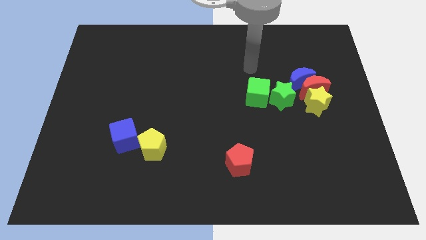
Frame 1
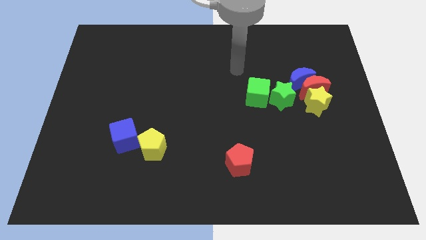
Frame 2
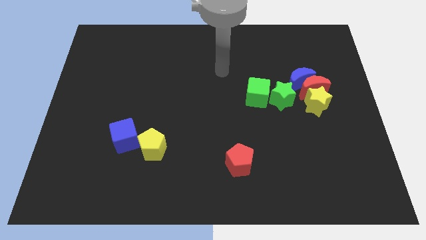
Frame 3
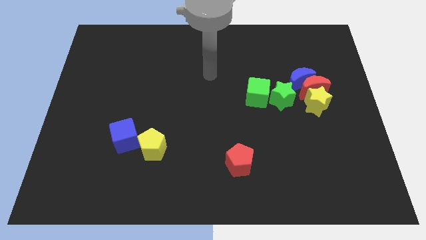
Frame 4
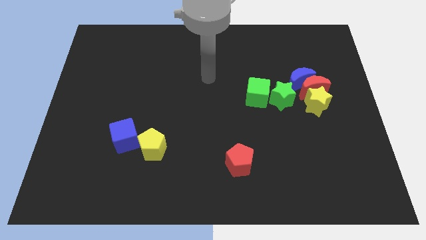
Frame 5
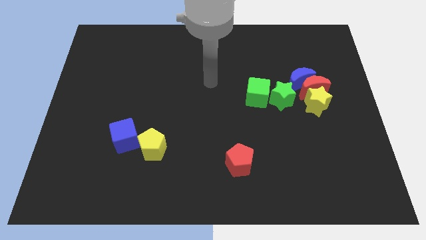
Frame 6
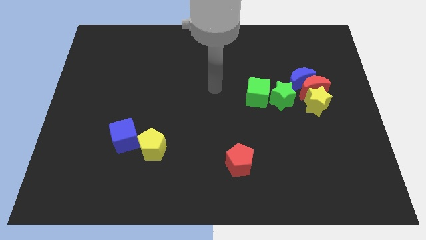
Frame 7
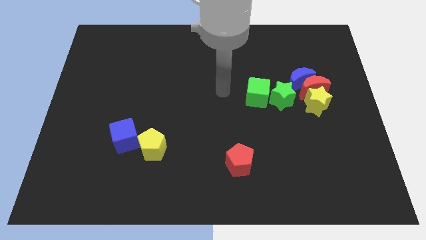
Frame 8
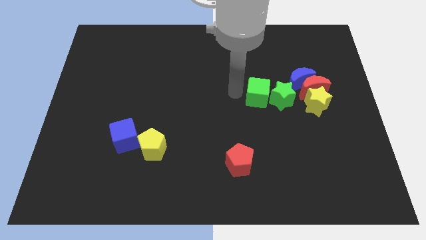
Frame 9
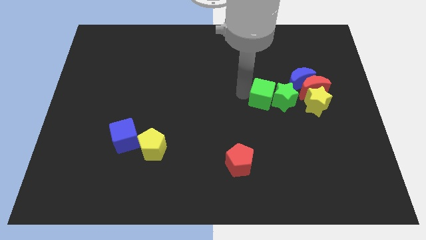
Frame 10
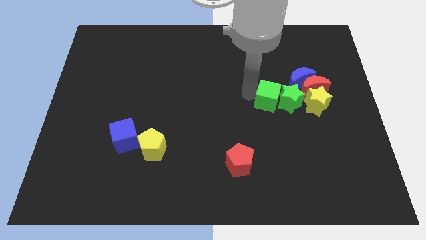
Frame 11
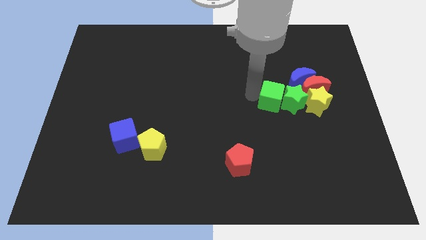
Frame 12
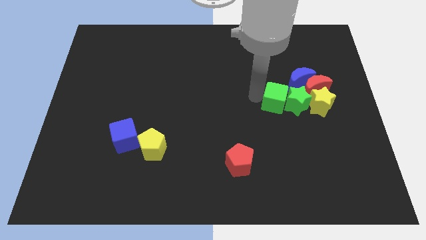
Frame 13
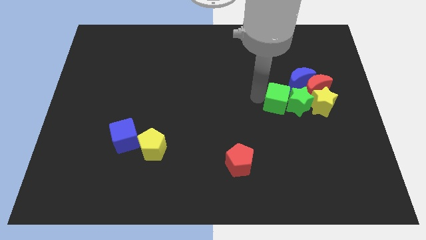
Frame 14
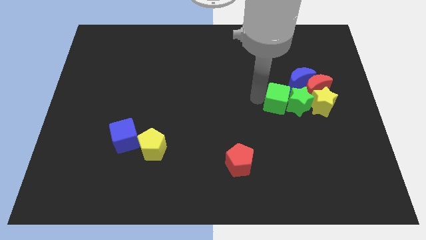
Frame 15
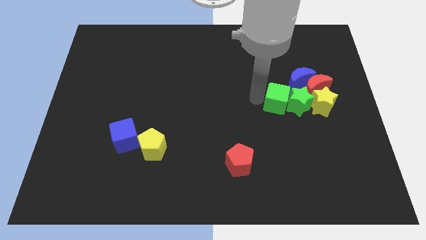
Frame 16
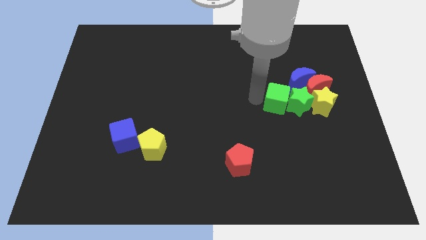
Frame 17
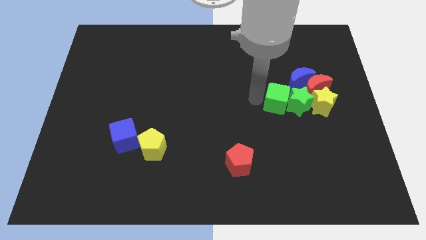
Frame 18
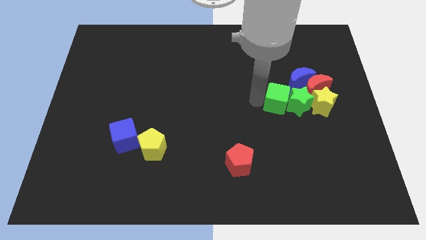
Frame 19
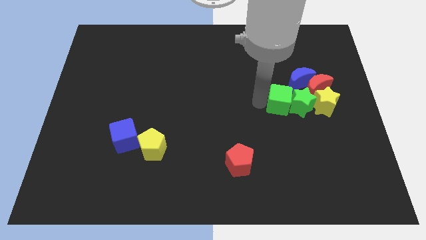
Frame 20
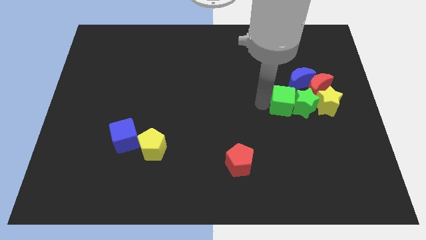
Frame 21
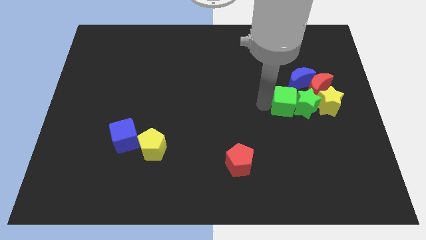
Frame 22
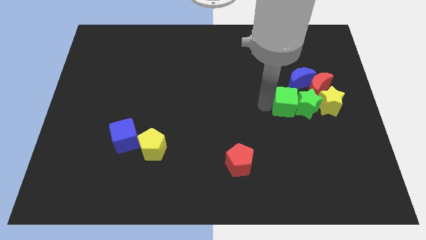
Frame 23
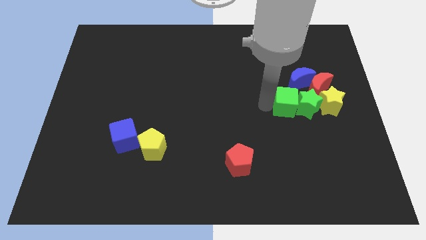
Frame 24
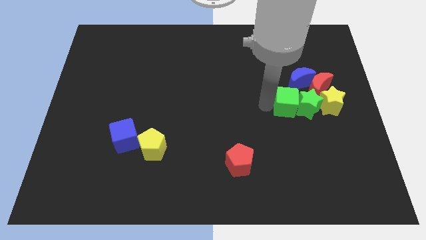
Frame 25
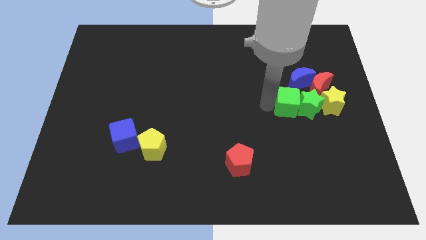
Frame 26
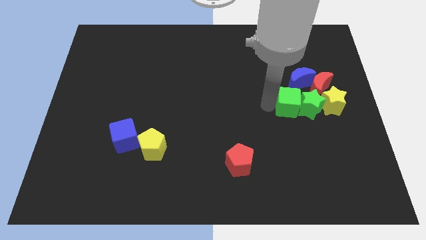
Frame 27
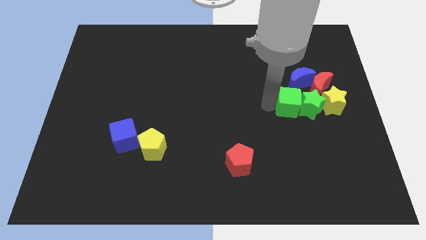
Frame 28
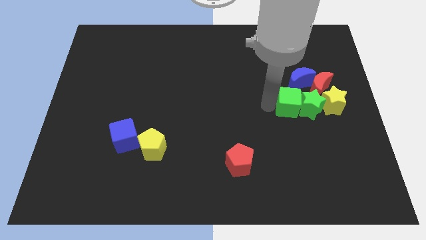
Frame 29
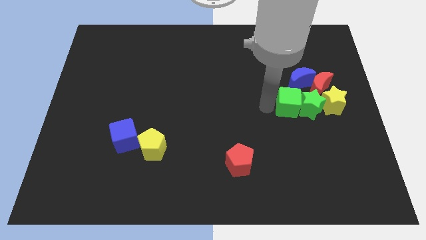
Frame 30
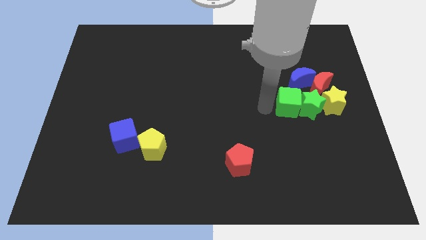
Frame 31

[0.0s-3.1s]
push the green cube along with the green star into the yellow star

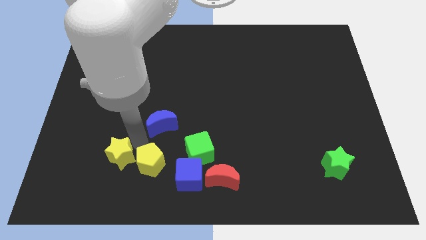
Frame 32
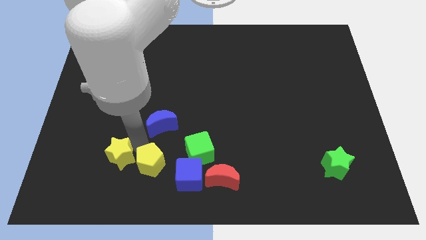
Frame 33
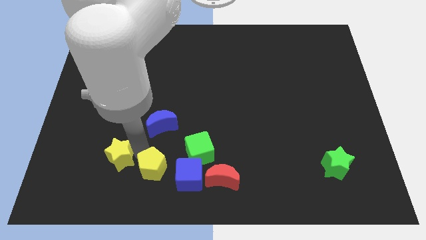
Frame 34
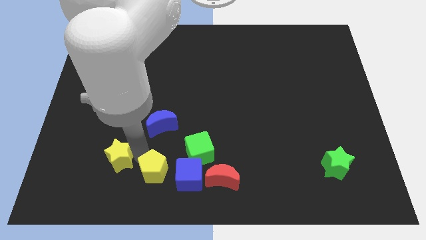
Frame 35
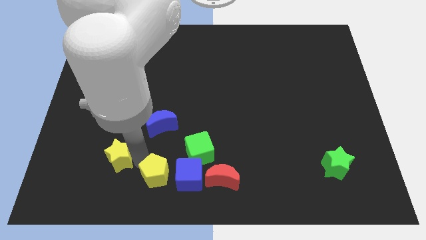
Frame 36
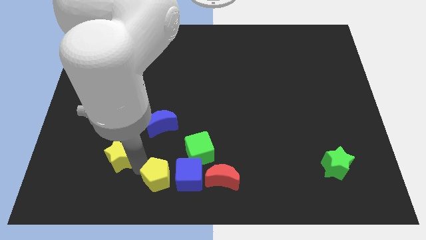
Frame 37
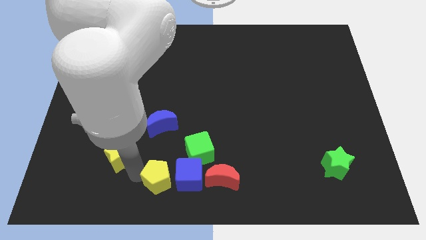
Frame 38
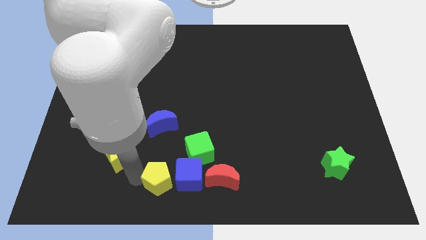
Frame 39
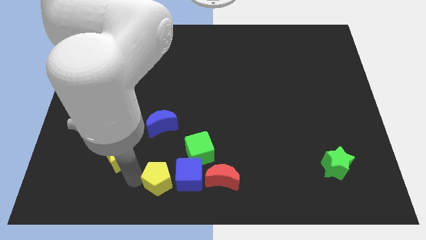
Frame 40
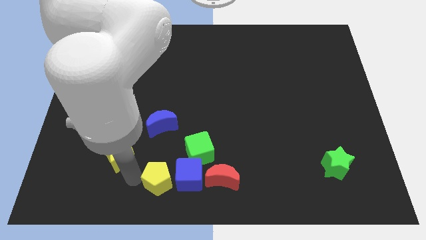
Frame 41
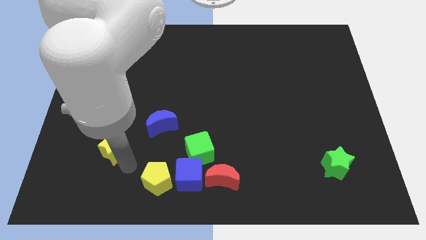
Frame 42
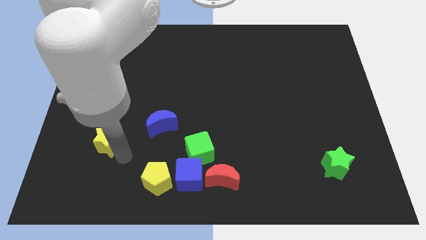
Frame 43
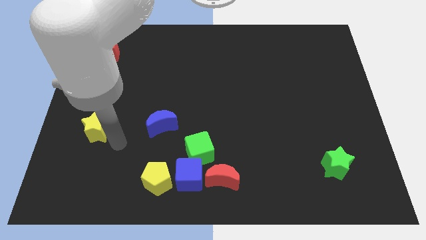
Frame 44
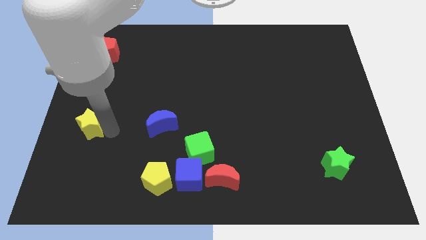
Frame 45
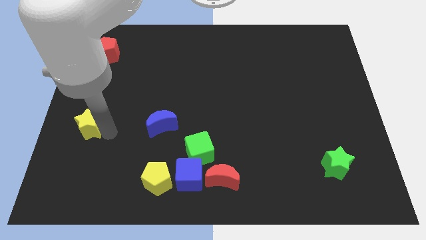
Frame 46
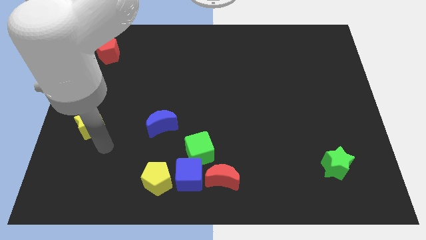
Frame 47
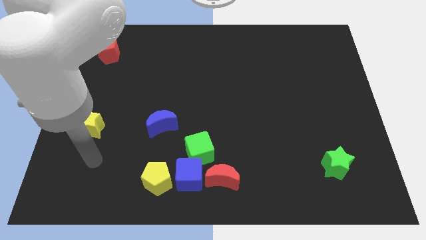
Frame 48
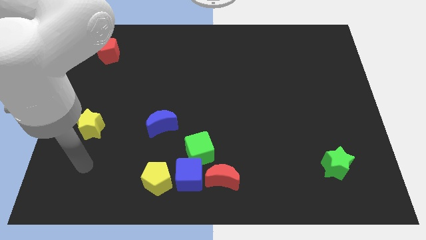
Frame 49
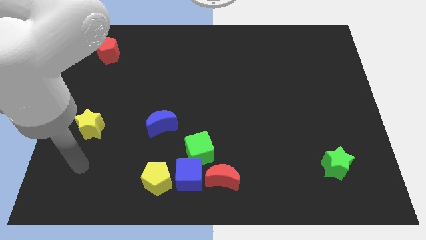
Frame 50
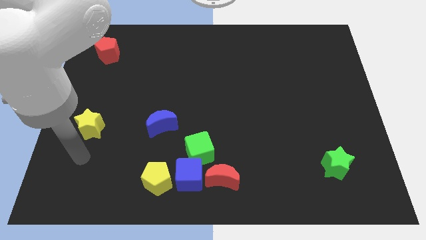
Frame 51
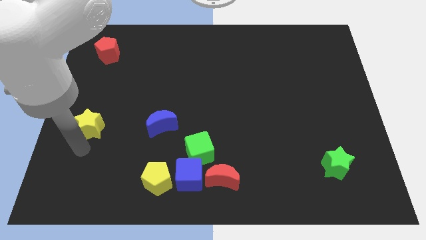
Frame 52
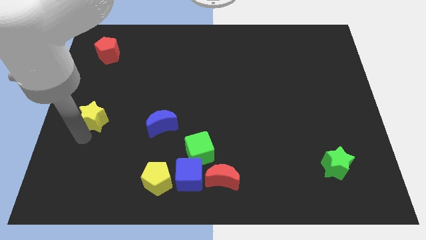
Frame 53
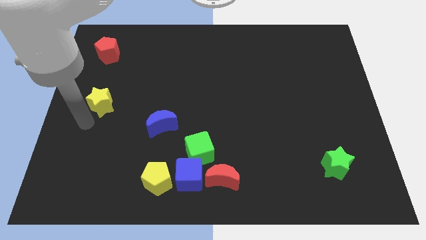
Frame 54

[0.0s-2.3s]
move the yellow pentagon to the left of the blue cube

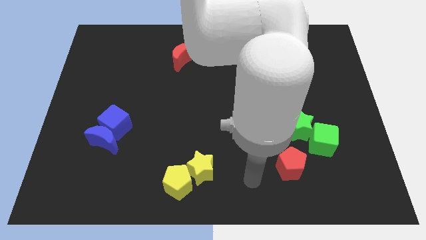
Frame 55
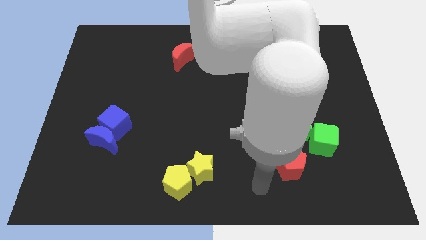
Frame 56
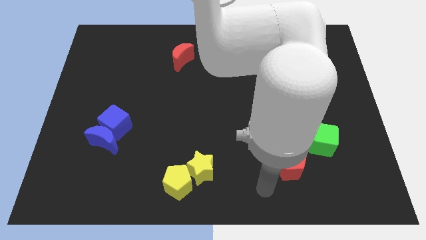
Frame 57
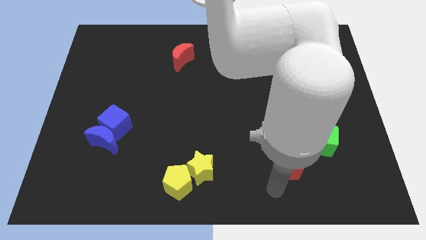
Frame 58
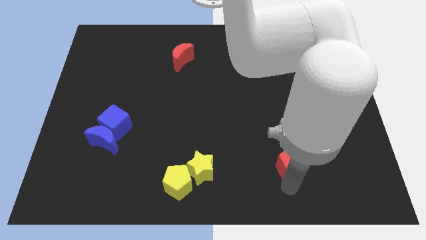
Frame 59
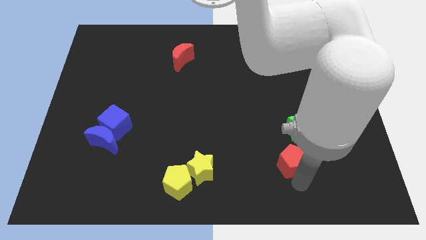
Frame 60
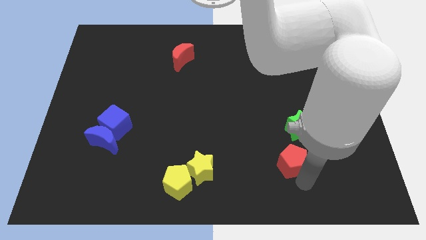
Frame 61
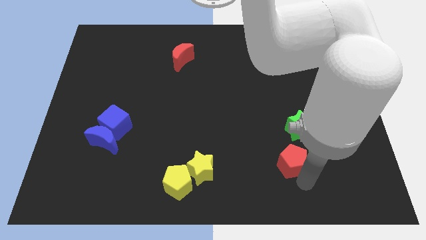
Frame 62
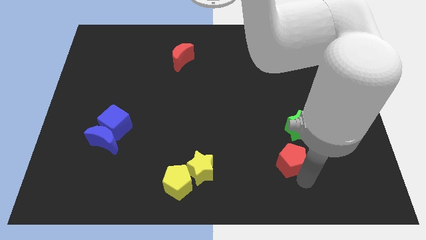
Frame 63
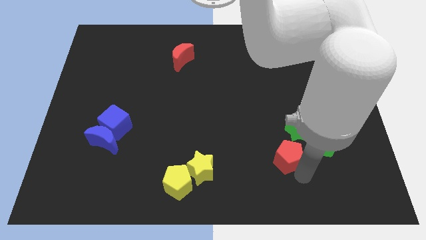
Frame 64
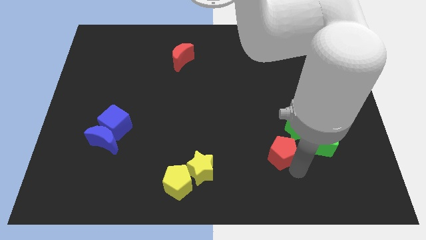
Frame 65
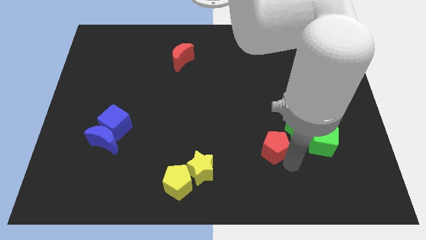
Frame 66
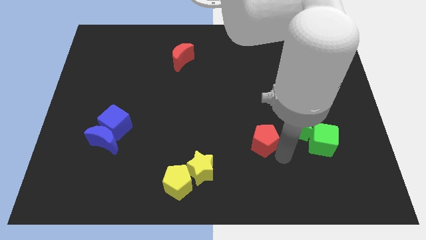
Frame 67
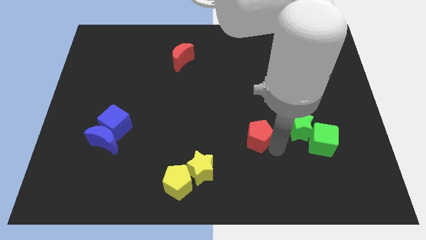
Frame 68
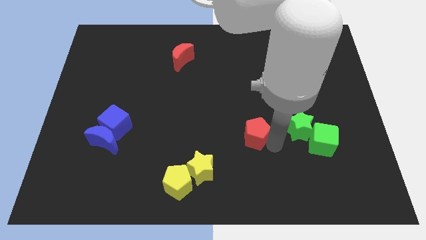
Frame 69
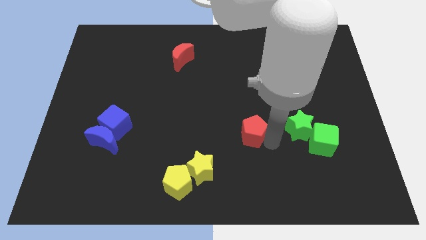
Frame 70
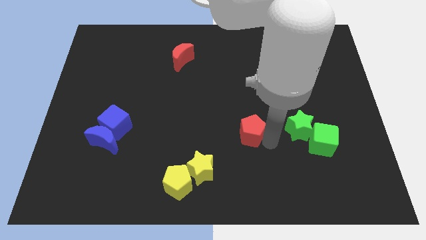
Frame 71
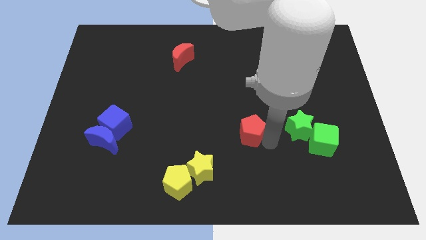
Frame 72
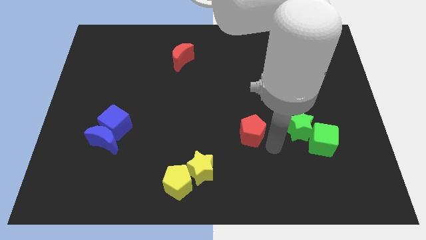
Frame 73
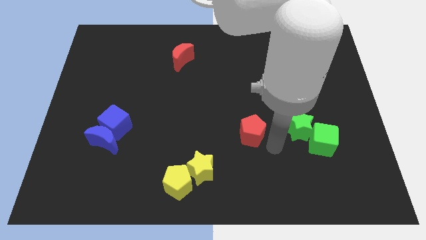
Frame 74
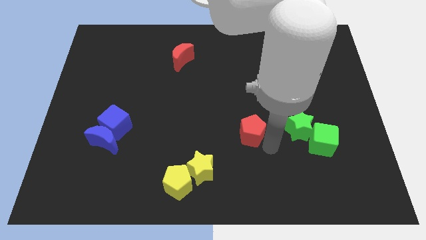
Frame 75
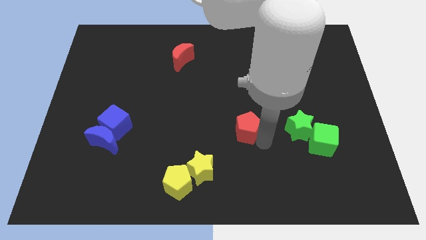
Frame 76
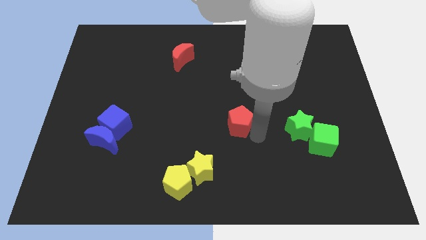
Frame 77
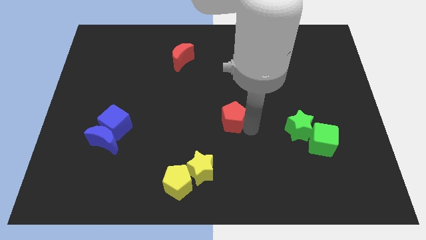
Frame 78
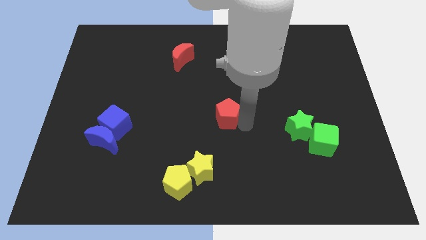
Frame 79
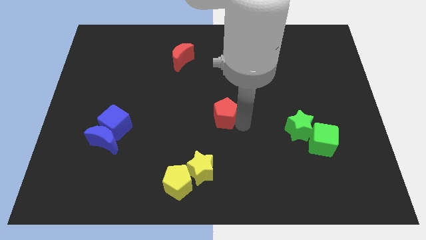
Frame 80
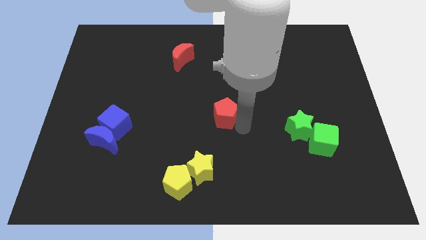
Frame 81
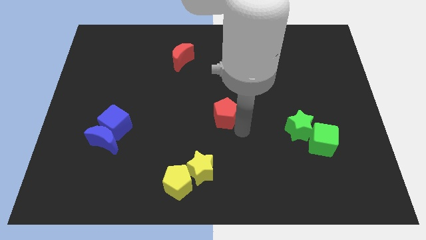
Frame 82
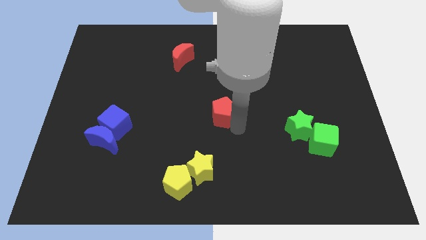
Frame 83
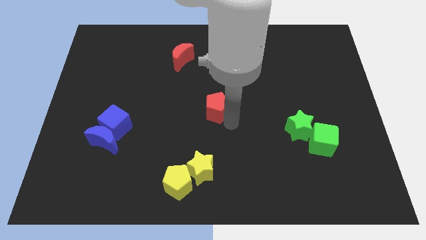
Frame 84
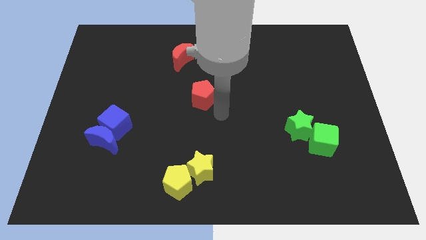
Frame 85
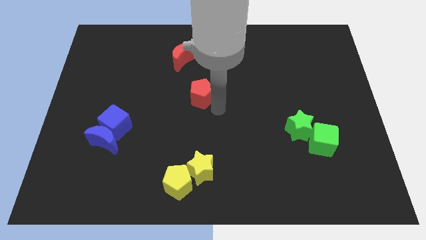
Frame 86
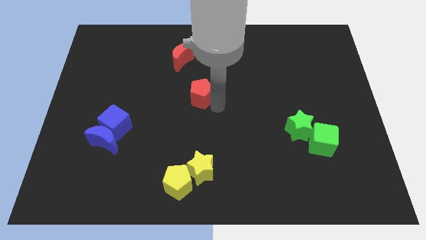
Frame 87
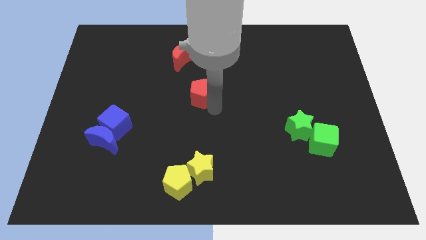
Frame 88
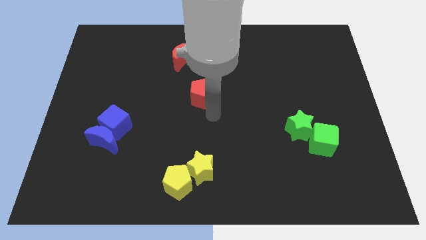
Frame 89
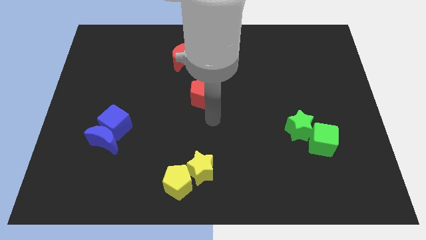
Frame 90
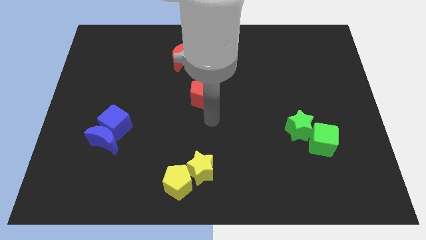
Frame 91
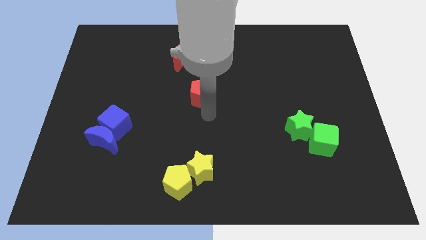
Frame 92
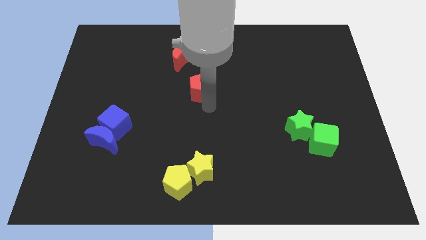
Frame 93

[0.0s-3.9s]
place the red pentagon above the yellow star
